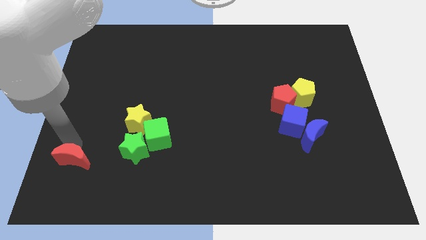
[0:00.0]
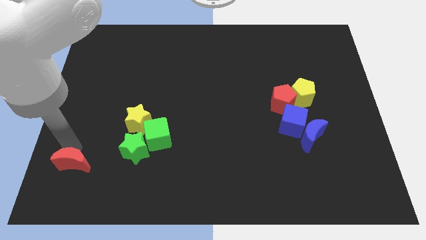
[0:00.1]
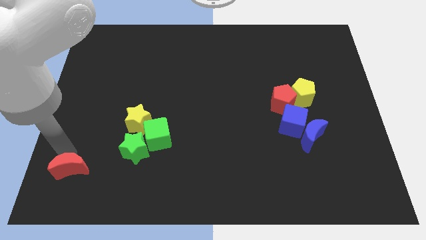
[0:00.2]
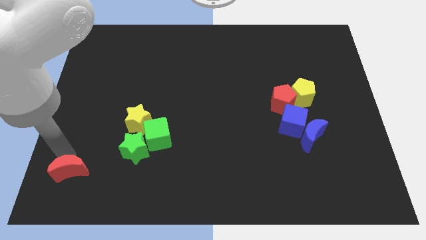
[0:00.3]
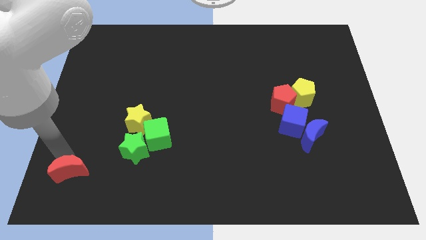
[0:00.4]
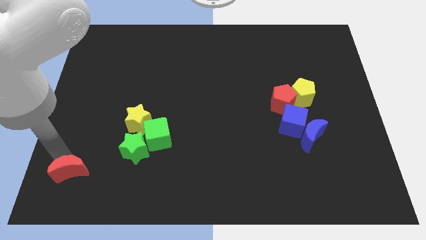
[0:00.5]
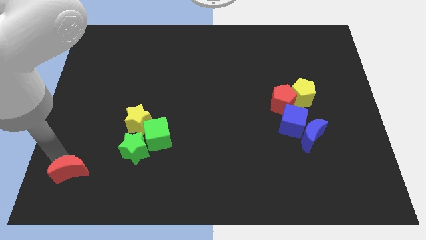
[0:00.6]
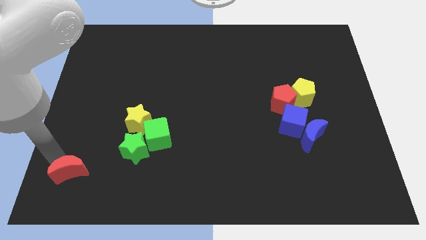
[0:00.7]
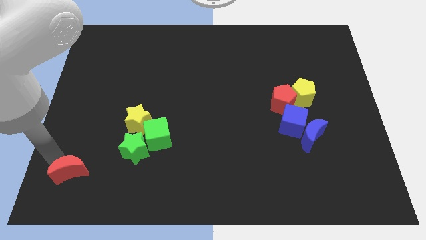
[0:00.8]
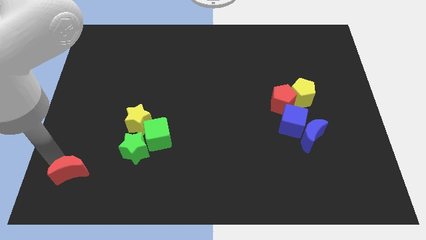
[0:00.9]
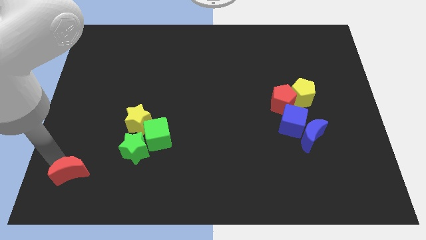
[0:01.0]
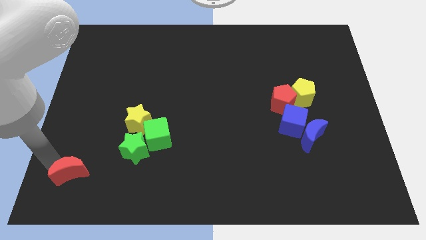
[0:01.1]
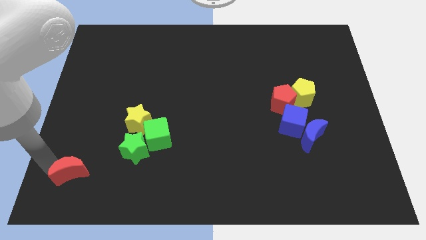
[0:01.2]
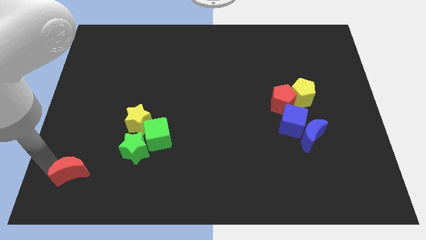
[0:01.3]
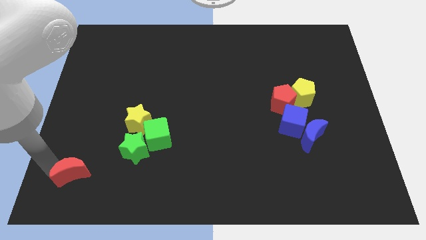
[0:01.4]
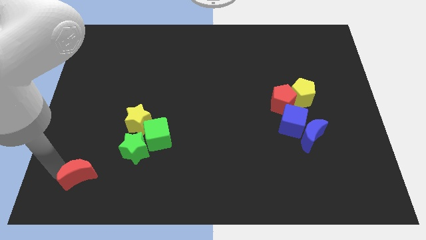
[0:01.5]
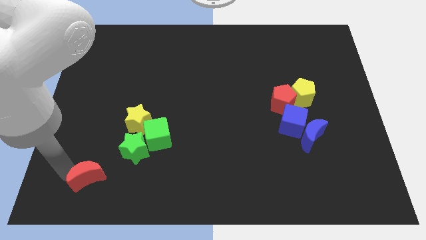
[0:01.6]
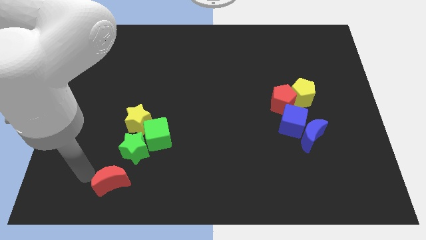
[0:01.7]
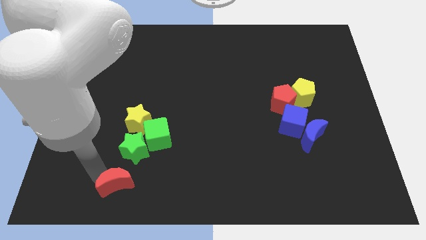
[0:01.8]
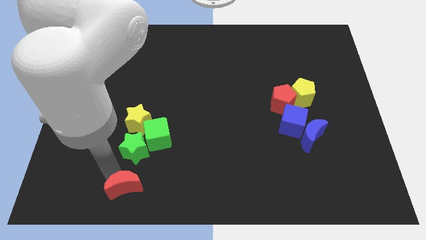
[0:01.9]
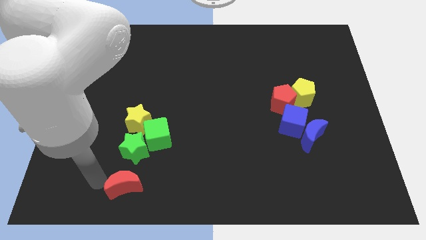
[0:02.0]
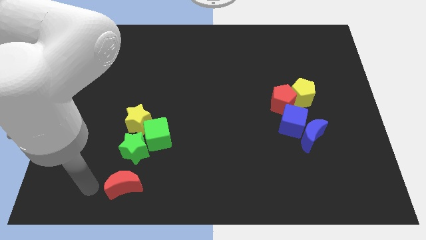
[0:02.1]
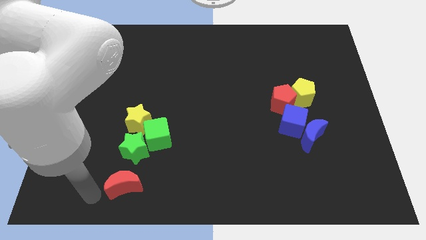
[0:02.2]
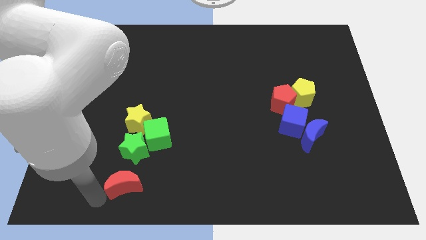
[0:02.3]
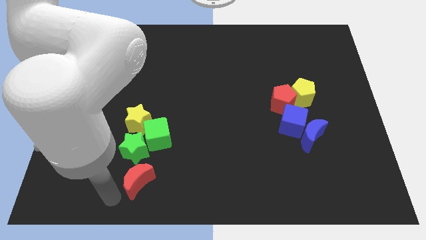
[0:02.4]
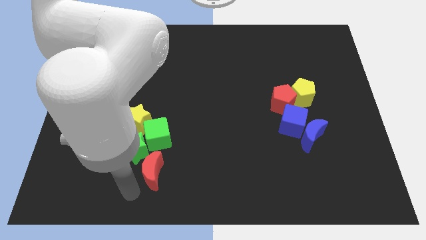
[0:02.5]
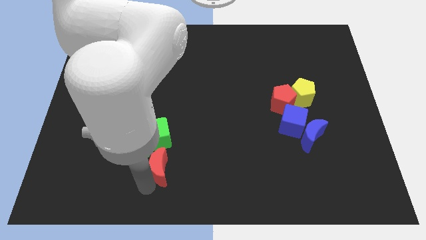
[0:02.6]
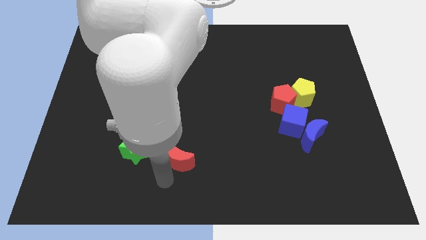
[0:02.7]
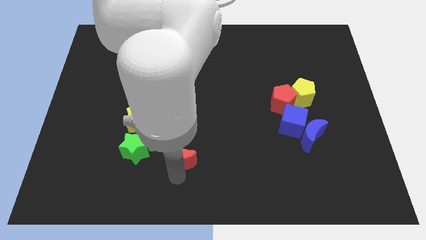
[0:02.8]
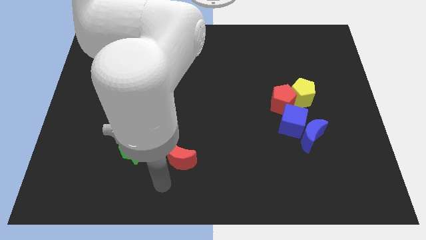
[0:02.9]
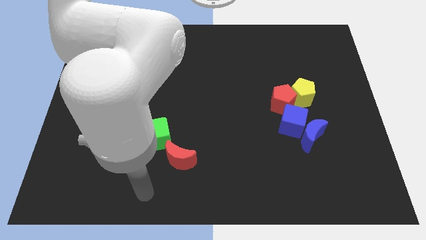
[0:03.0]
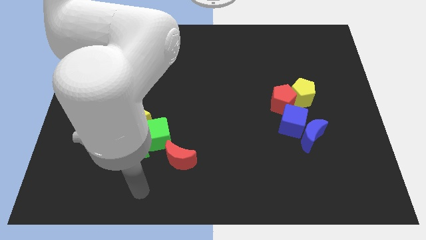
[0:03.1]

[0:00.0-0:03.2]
move the red moon to the bottom right of the green cube

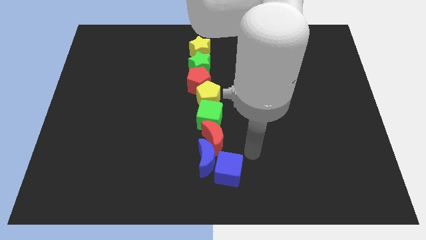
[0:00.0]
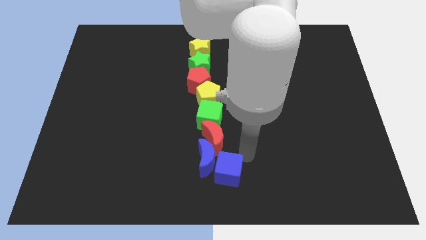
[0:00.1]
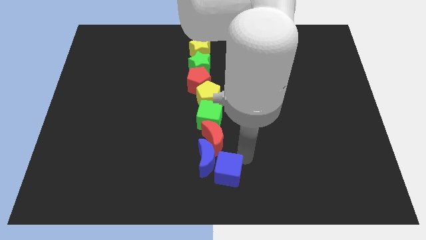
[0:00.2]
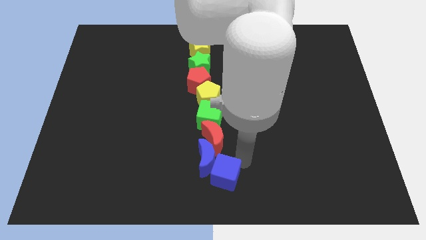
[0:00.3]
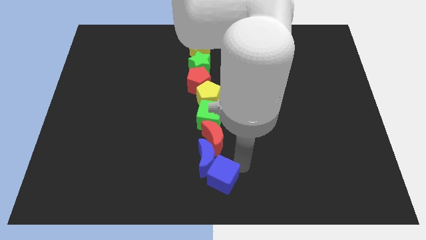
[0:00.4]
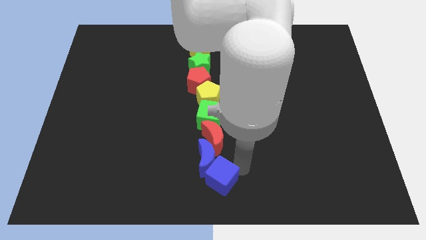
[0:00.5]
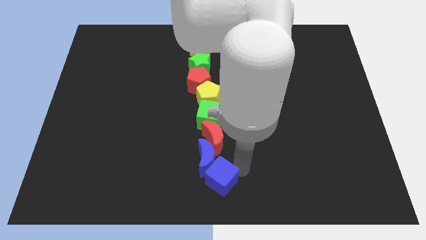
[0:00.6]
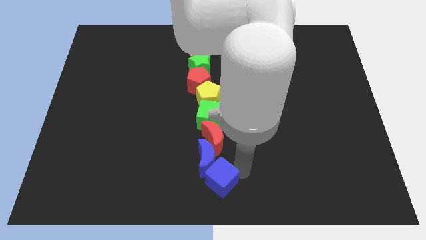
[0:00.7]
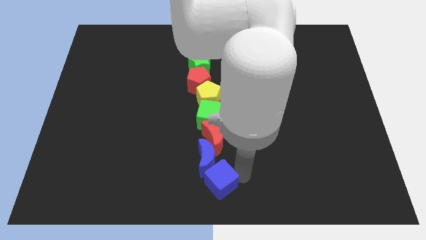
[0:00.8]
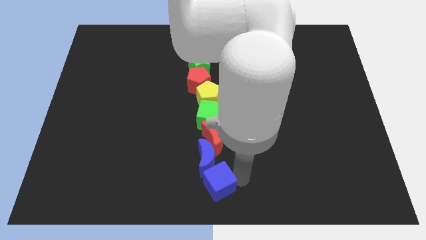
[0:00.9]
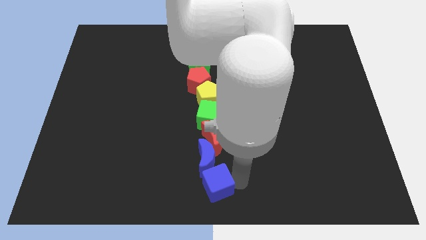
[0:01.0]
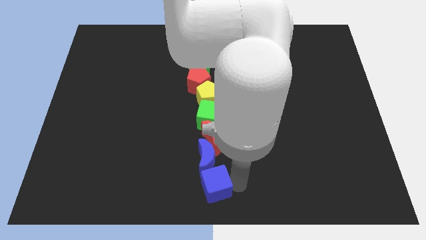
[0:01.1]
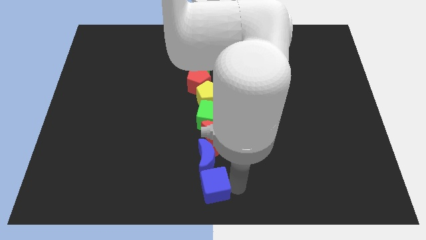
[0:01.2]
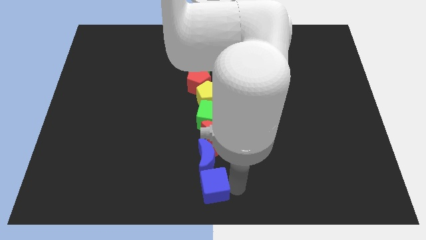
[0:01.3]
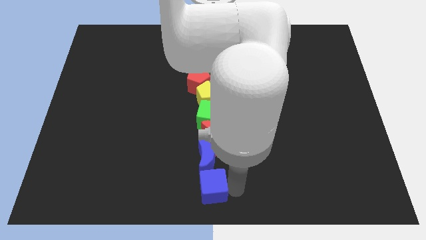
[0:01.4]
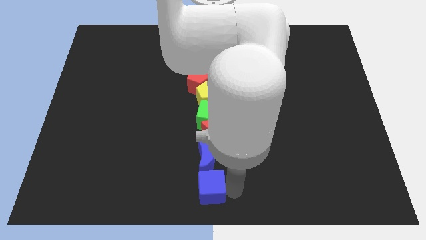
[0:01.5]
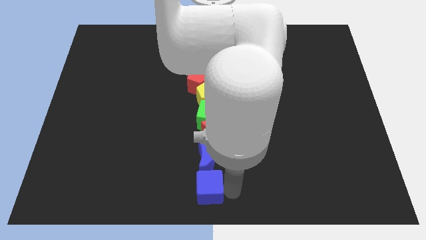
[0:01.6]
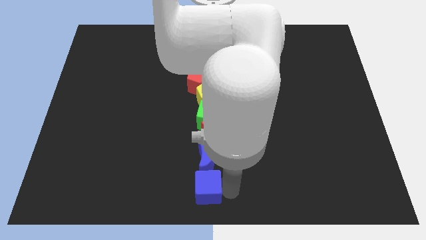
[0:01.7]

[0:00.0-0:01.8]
put the blue cube underneath the blue moon

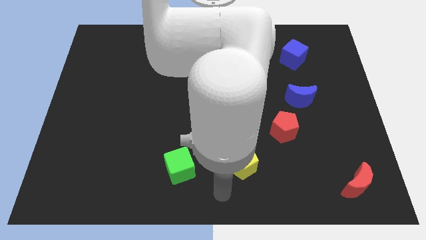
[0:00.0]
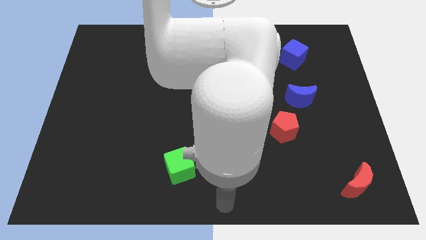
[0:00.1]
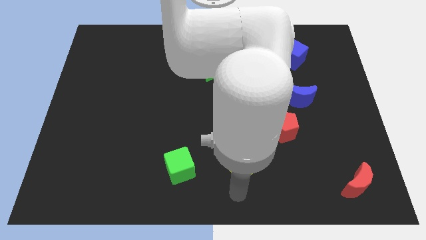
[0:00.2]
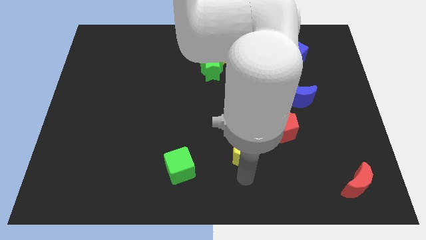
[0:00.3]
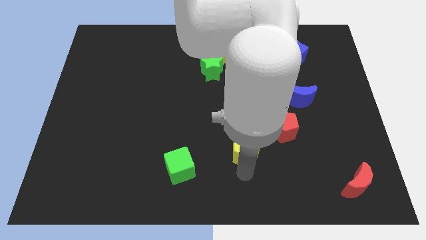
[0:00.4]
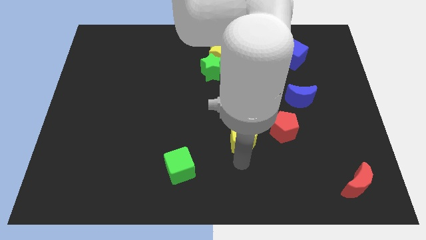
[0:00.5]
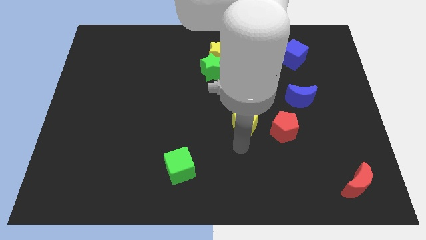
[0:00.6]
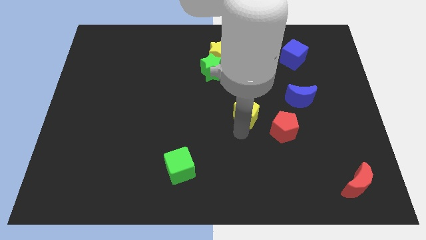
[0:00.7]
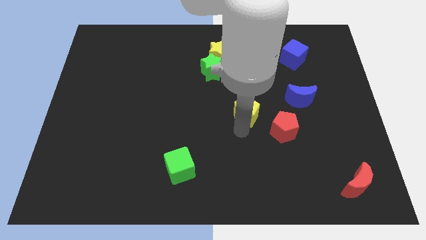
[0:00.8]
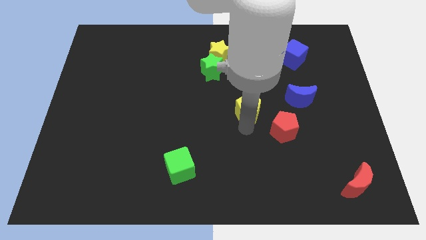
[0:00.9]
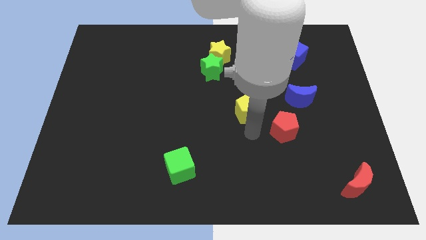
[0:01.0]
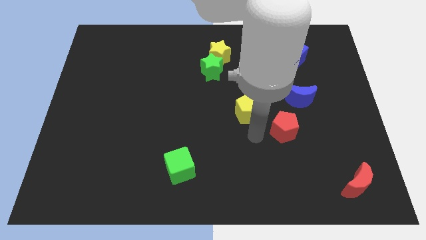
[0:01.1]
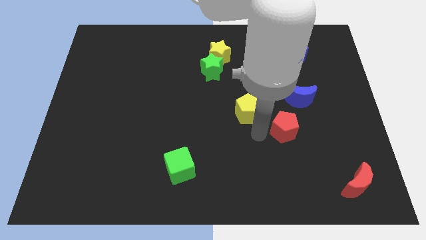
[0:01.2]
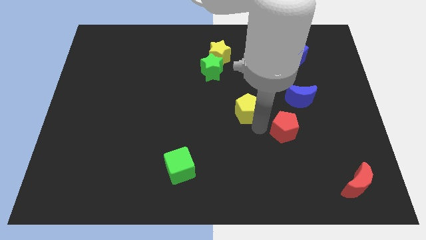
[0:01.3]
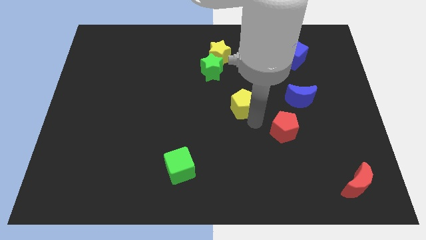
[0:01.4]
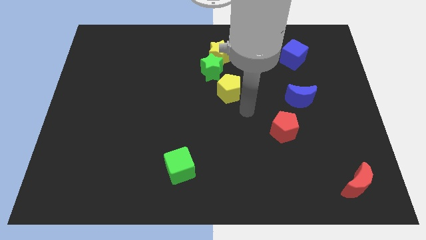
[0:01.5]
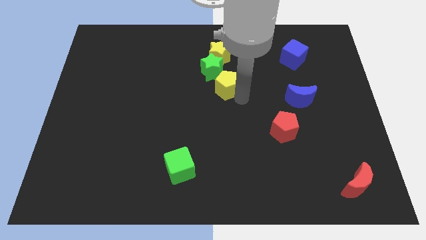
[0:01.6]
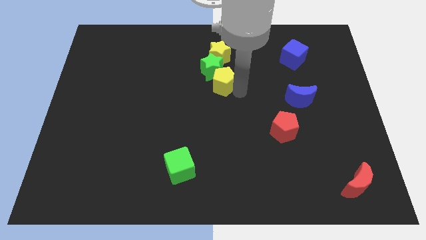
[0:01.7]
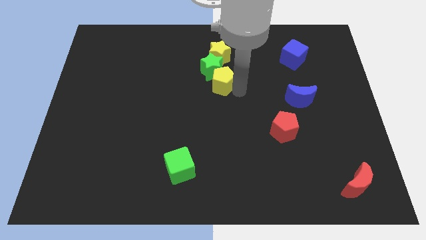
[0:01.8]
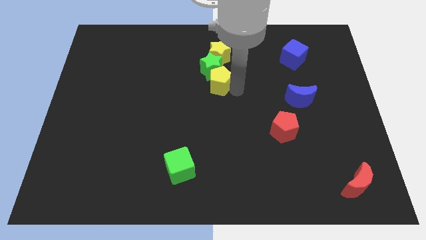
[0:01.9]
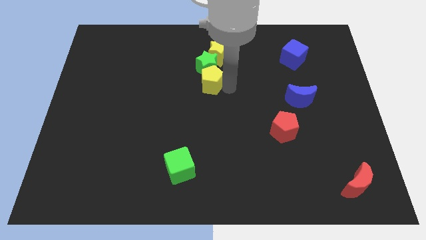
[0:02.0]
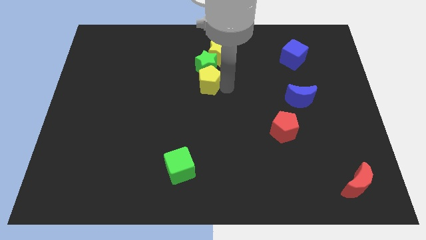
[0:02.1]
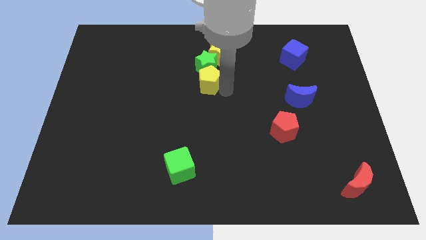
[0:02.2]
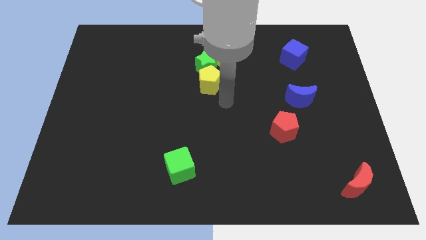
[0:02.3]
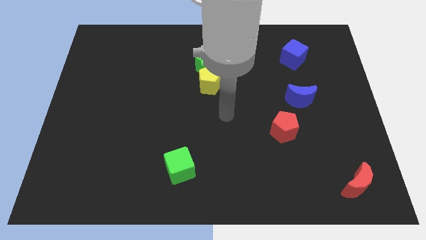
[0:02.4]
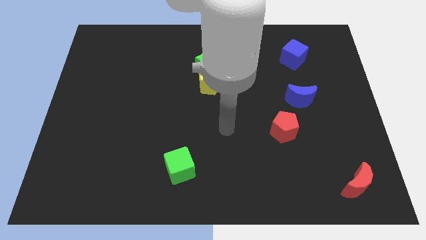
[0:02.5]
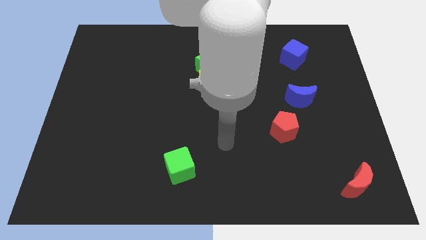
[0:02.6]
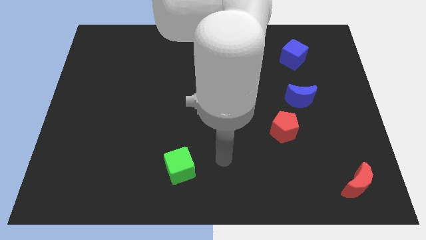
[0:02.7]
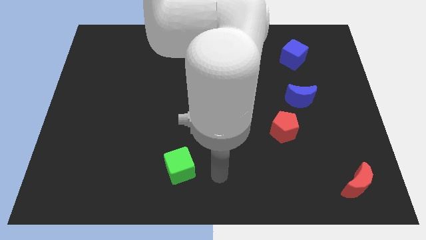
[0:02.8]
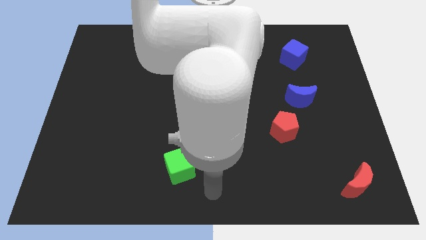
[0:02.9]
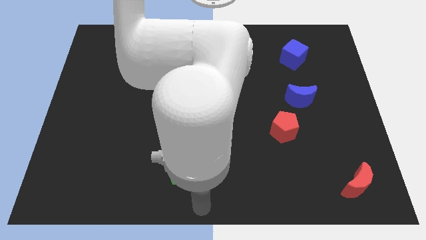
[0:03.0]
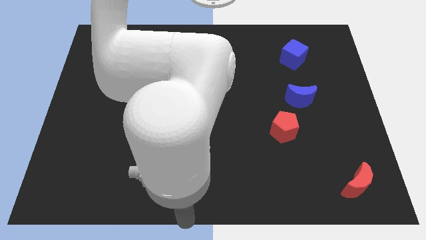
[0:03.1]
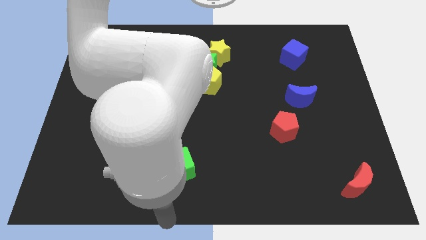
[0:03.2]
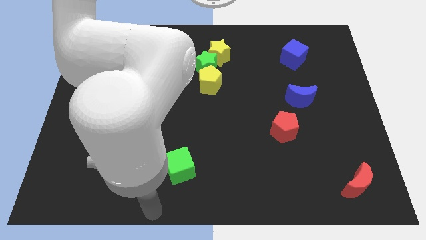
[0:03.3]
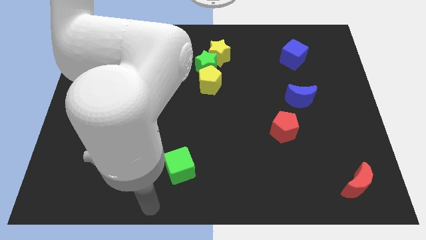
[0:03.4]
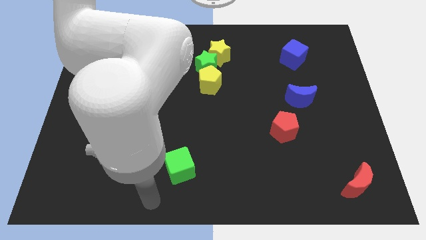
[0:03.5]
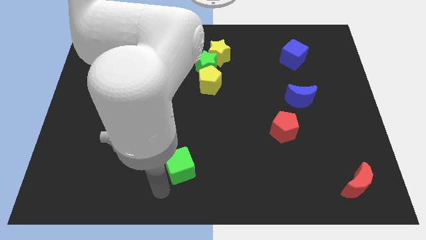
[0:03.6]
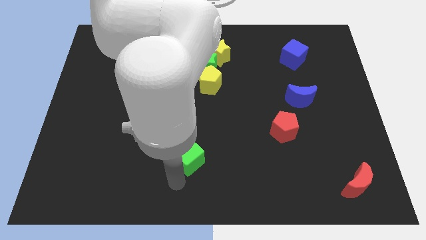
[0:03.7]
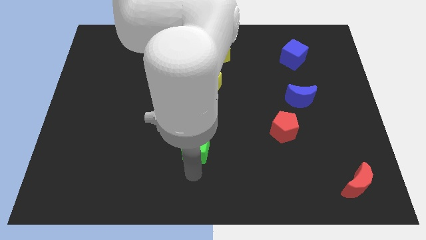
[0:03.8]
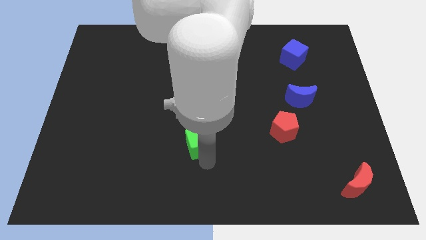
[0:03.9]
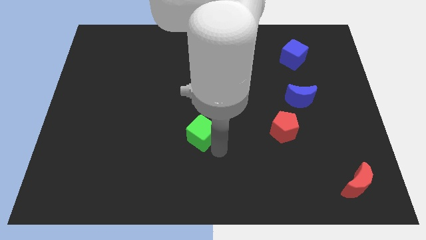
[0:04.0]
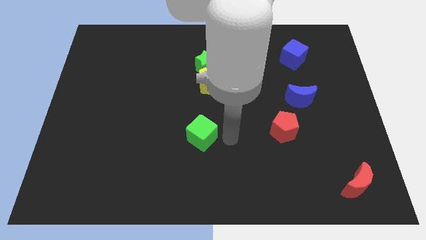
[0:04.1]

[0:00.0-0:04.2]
move the green cube and yellow pentagon upwards
